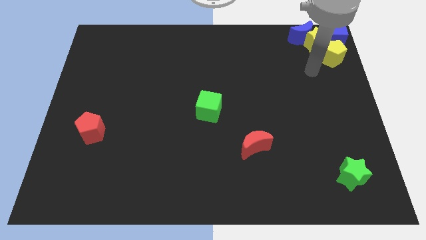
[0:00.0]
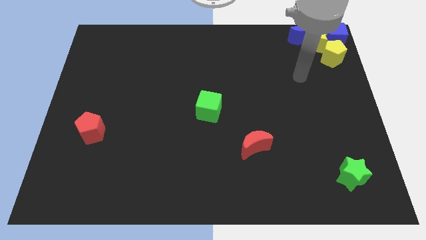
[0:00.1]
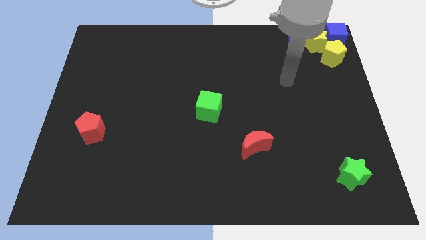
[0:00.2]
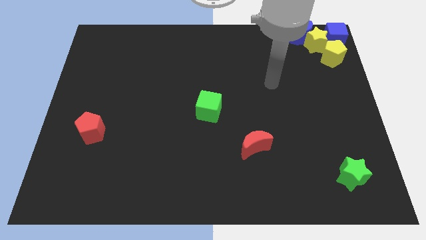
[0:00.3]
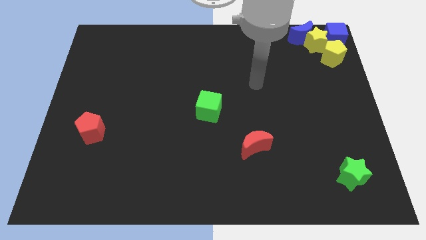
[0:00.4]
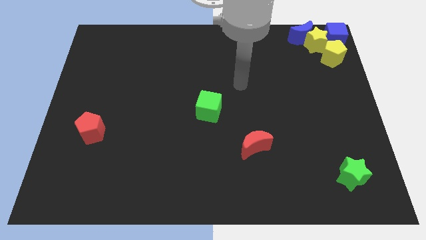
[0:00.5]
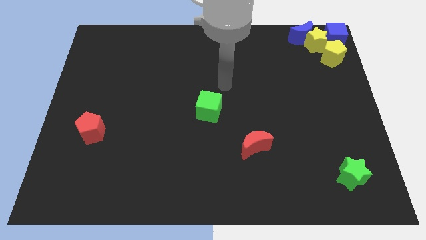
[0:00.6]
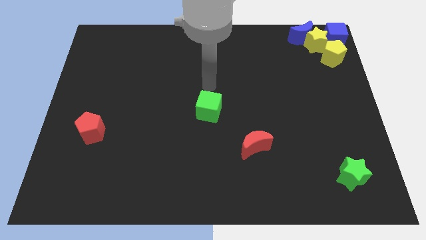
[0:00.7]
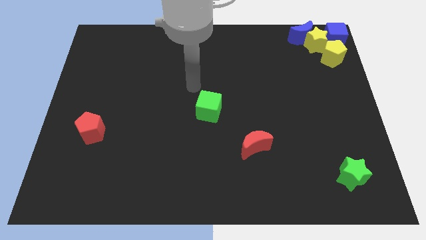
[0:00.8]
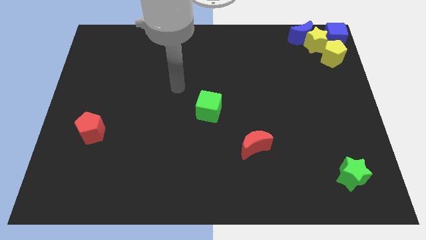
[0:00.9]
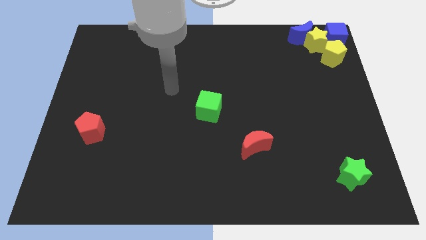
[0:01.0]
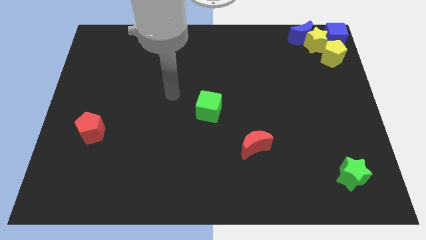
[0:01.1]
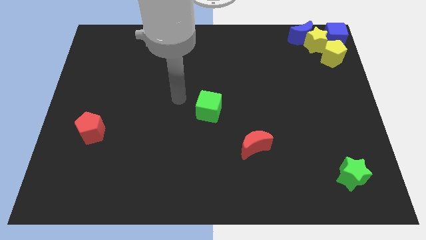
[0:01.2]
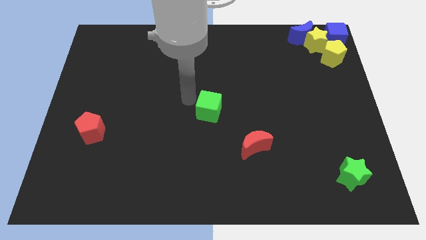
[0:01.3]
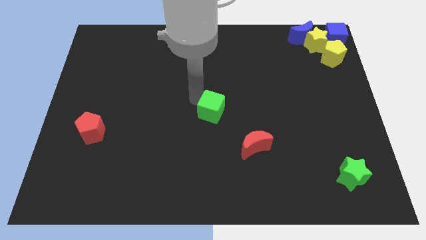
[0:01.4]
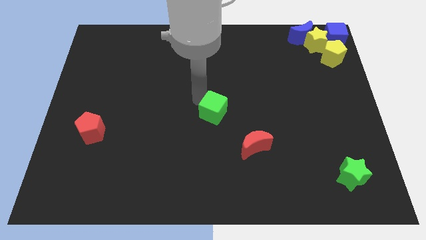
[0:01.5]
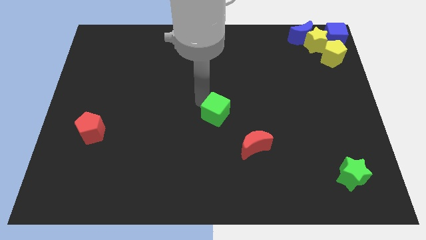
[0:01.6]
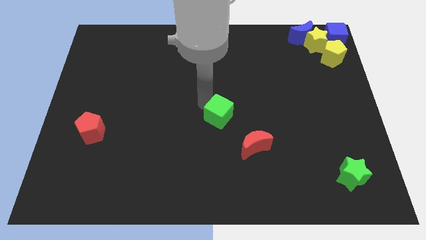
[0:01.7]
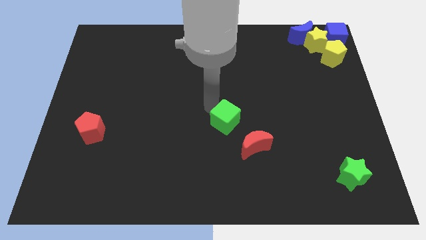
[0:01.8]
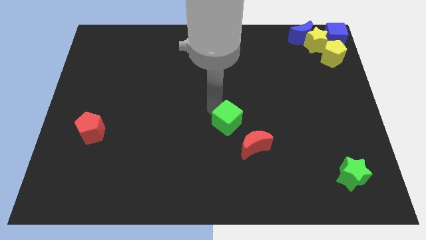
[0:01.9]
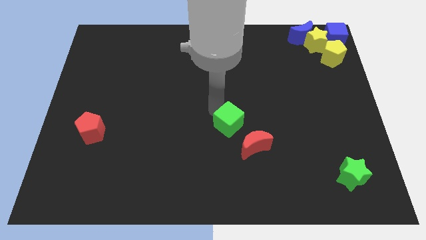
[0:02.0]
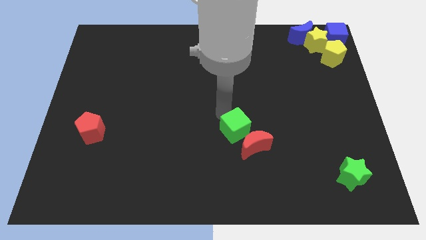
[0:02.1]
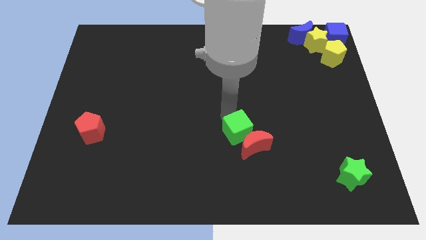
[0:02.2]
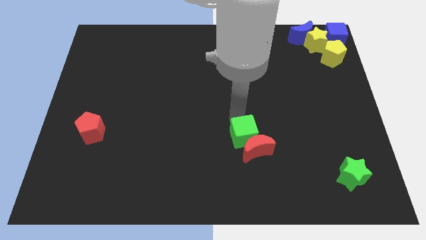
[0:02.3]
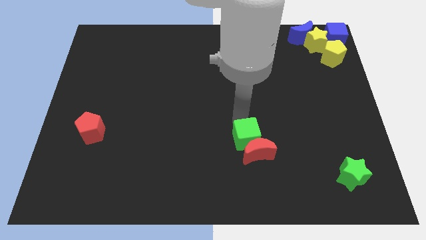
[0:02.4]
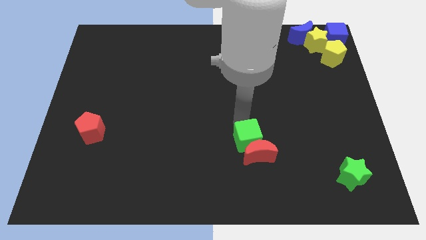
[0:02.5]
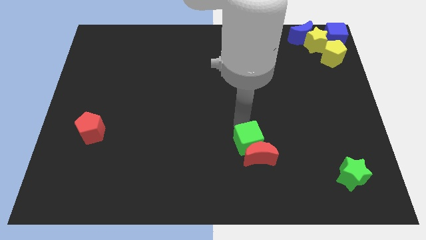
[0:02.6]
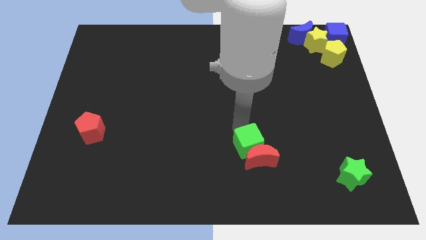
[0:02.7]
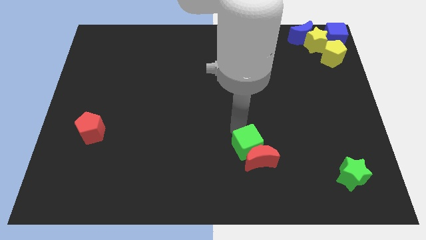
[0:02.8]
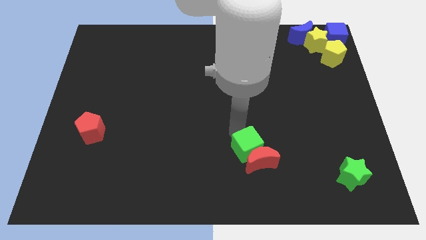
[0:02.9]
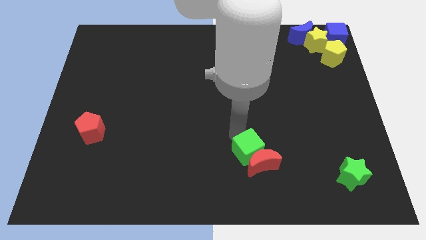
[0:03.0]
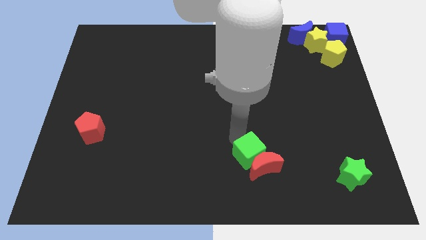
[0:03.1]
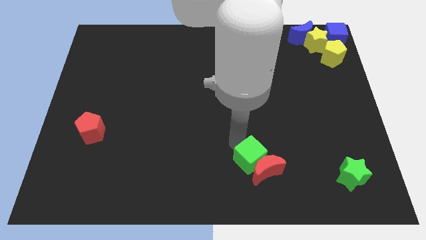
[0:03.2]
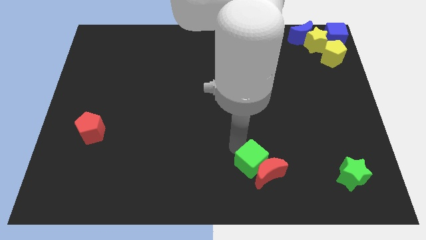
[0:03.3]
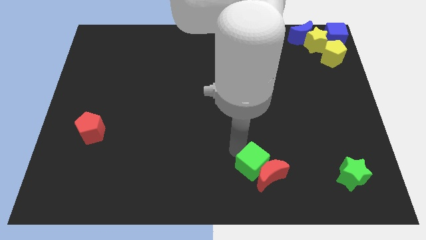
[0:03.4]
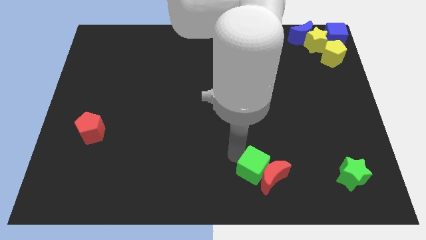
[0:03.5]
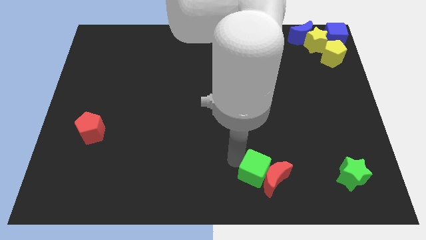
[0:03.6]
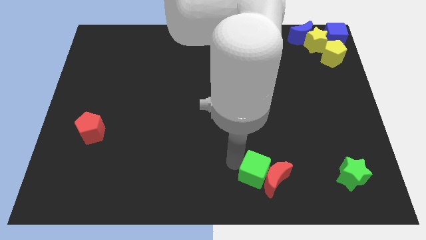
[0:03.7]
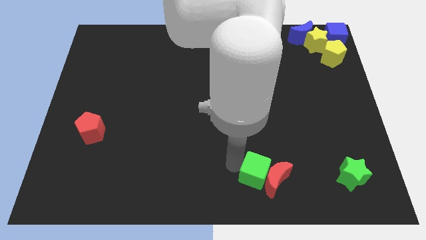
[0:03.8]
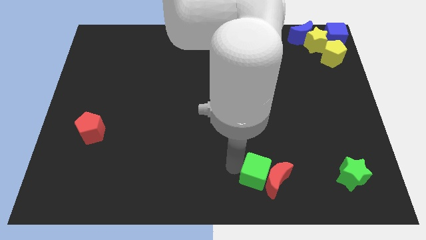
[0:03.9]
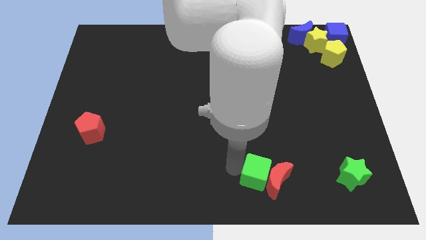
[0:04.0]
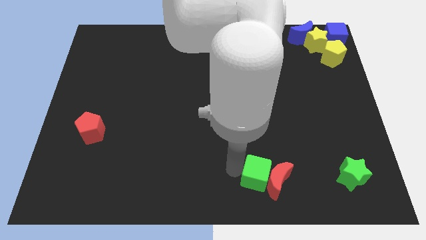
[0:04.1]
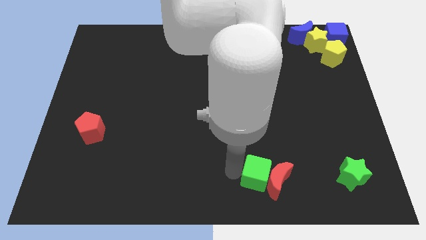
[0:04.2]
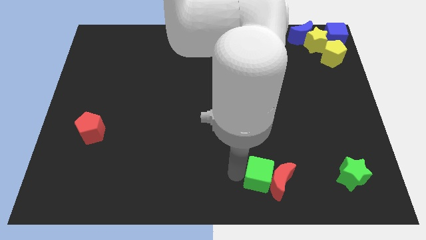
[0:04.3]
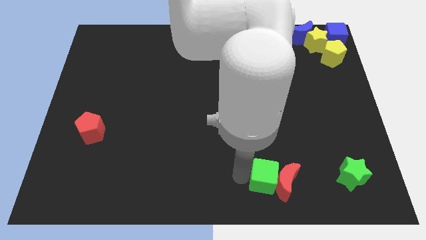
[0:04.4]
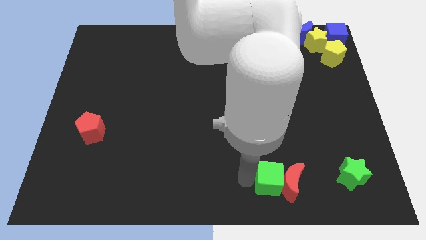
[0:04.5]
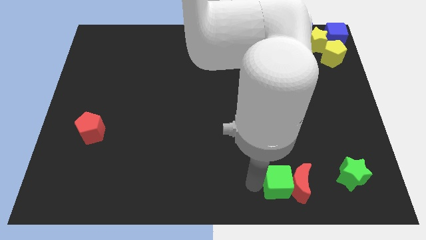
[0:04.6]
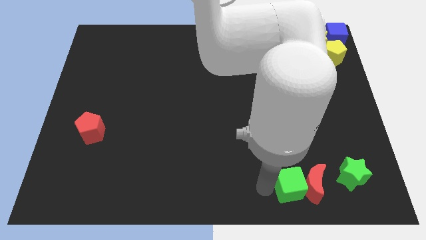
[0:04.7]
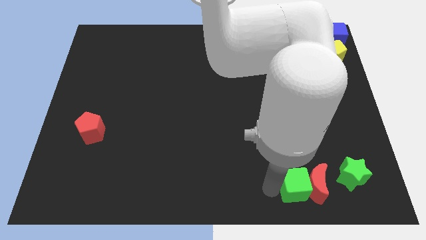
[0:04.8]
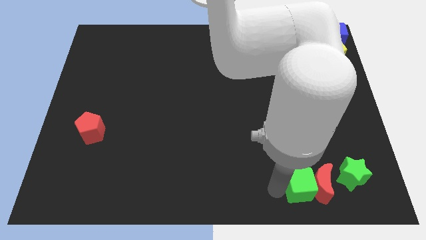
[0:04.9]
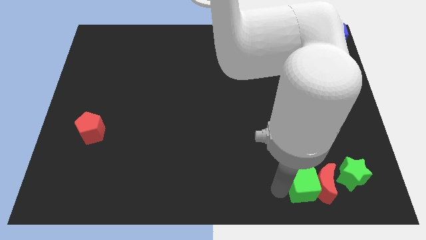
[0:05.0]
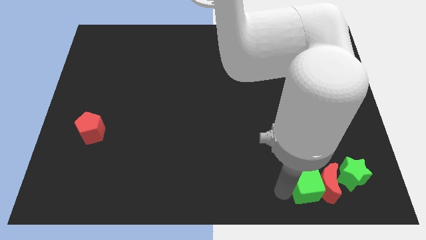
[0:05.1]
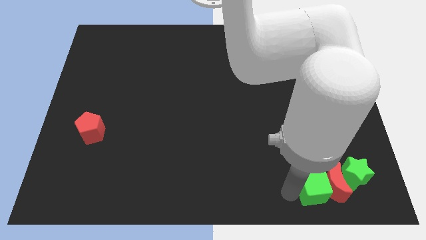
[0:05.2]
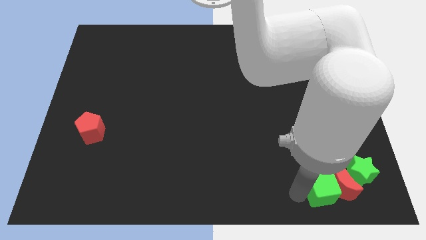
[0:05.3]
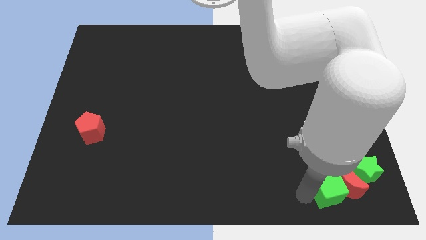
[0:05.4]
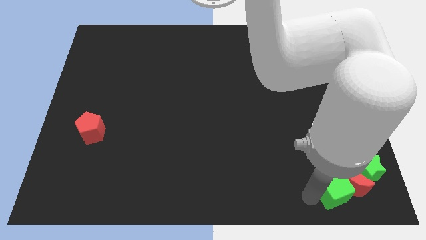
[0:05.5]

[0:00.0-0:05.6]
push the green cube and red crescent into the green star

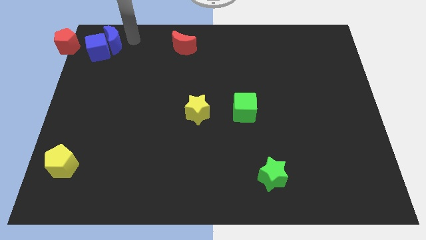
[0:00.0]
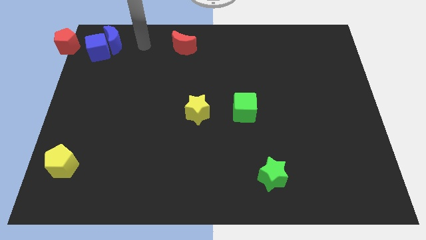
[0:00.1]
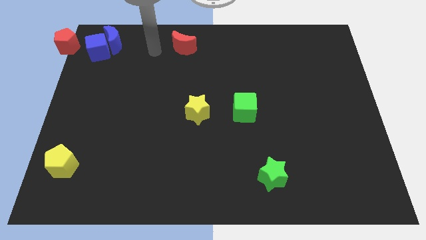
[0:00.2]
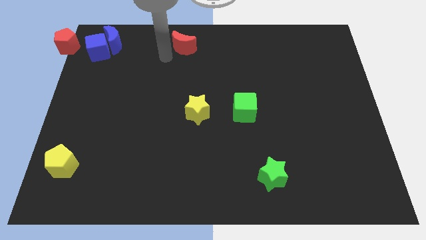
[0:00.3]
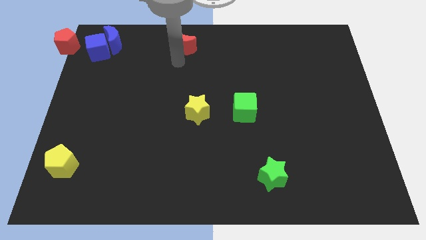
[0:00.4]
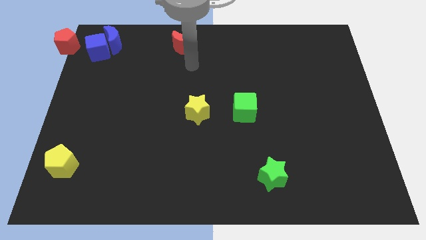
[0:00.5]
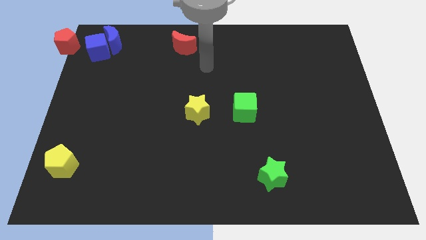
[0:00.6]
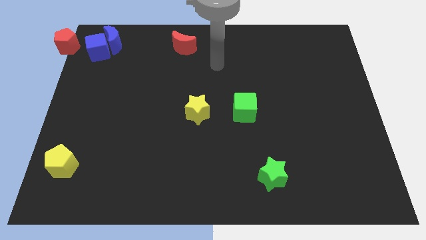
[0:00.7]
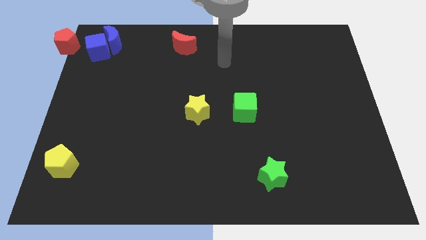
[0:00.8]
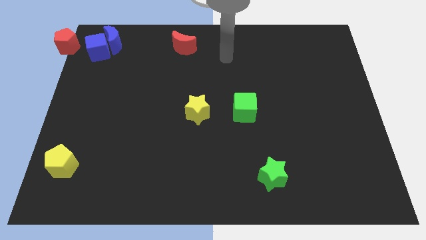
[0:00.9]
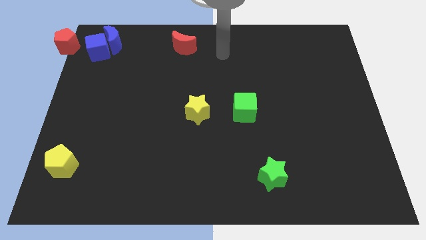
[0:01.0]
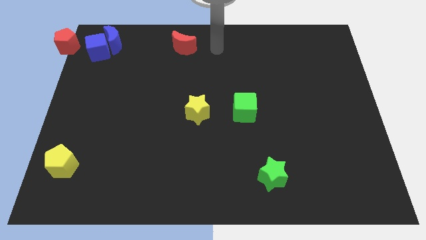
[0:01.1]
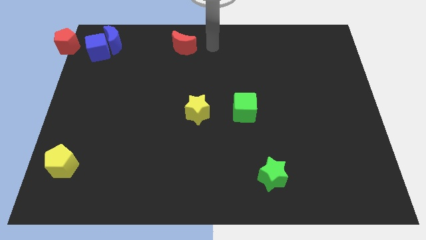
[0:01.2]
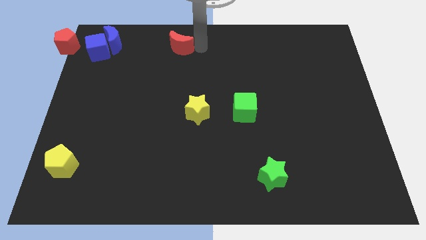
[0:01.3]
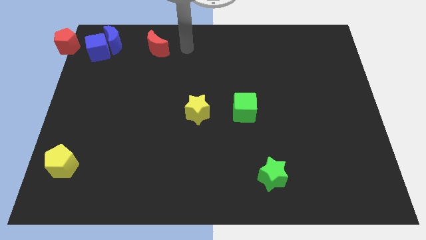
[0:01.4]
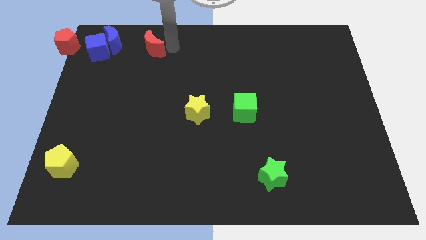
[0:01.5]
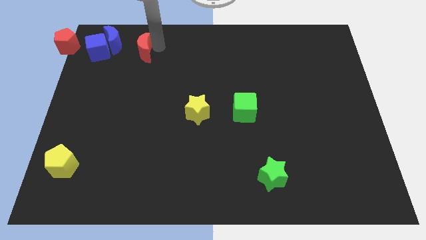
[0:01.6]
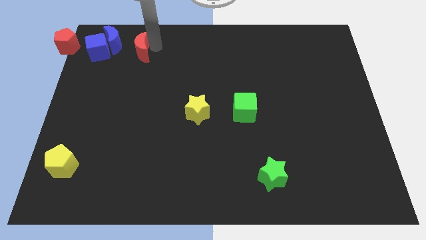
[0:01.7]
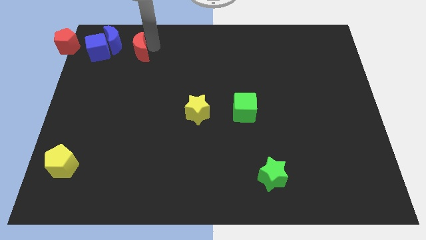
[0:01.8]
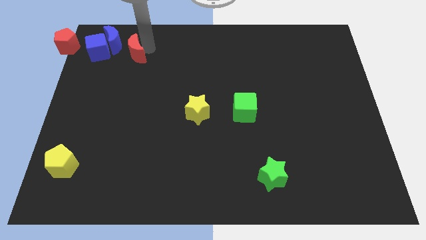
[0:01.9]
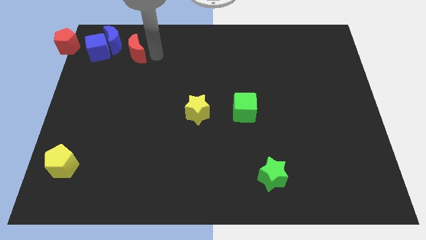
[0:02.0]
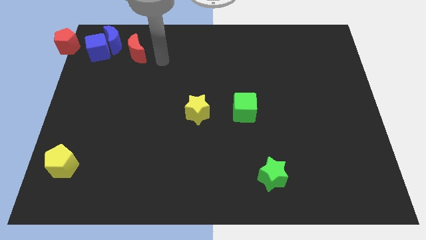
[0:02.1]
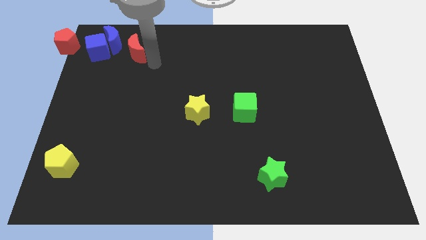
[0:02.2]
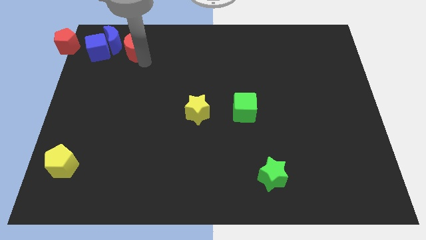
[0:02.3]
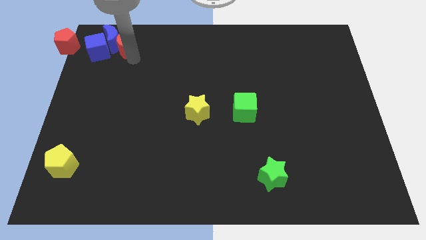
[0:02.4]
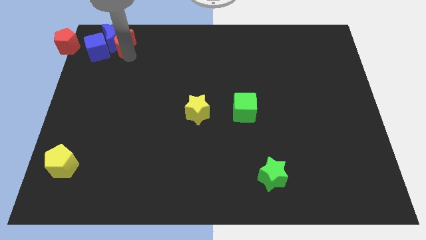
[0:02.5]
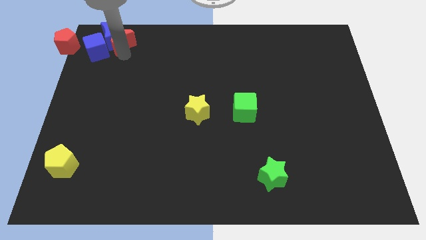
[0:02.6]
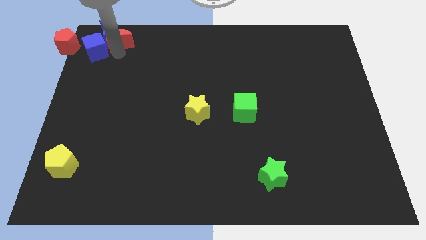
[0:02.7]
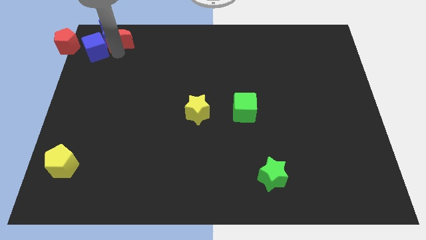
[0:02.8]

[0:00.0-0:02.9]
push the red moon into the group of blocks

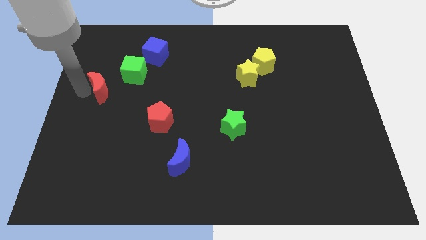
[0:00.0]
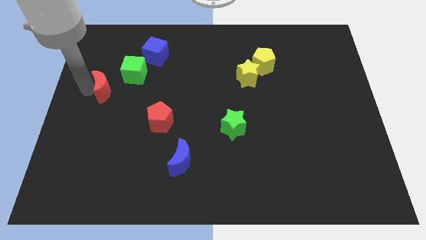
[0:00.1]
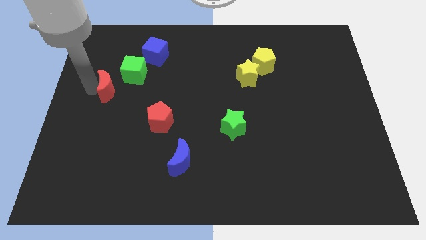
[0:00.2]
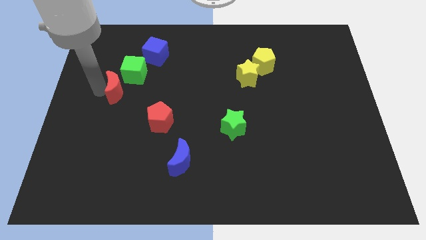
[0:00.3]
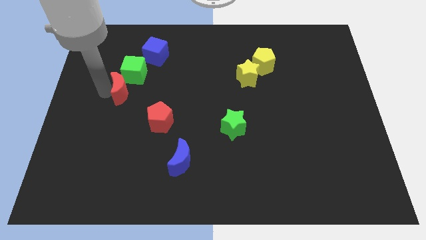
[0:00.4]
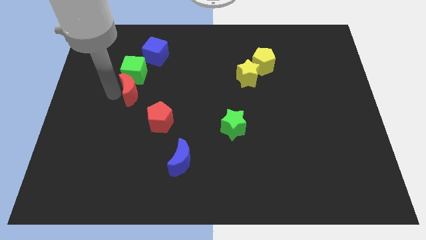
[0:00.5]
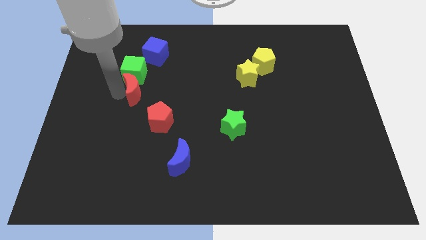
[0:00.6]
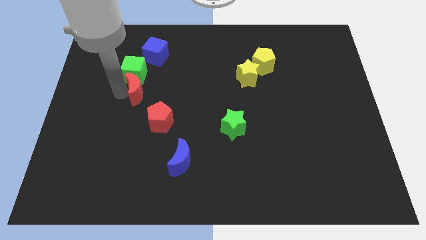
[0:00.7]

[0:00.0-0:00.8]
push the red crescent to the bottom of the green cube
